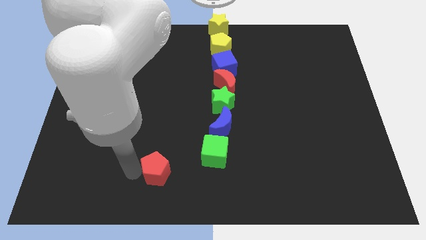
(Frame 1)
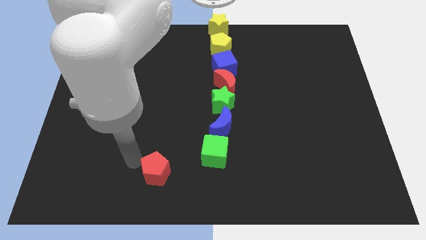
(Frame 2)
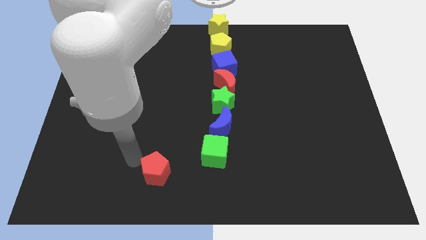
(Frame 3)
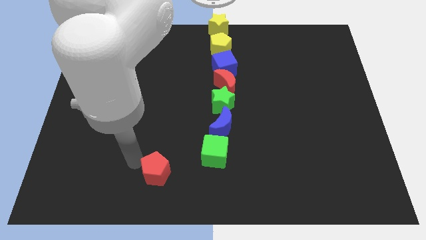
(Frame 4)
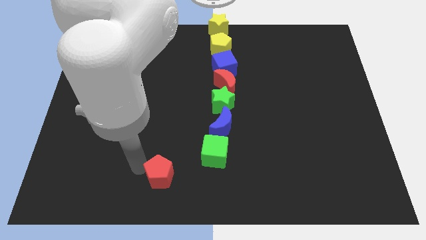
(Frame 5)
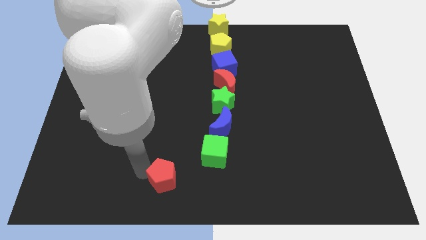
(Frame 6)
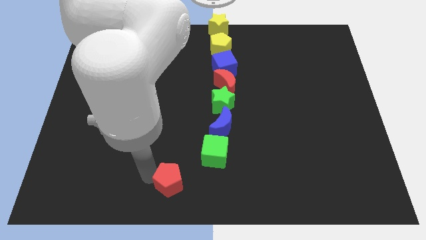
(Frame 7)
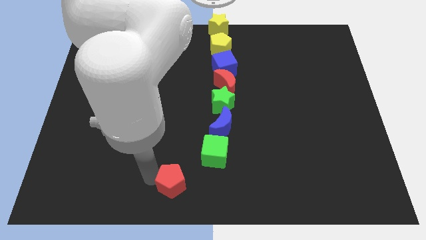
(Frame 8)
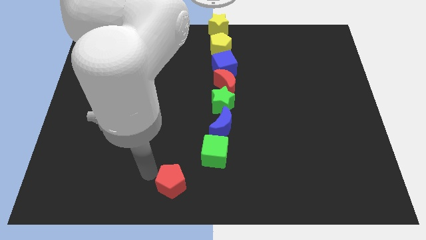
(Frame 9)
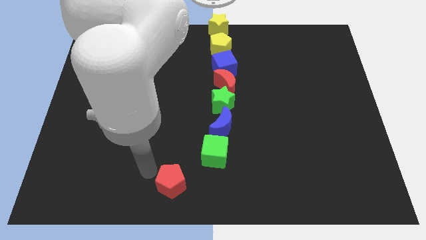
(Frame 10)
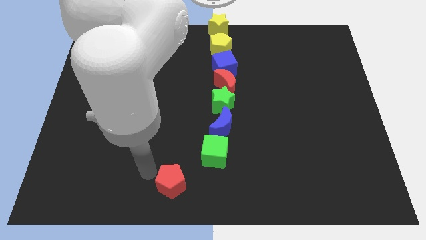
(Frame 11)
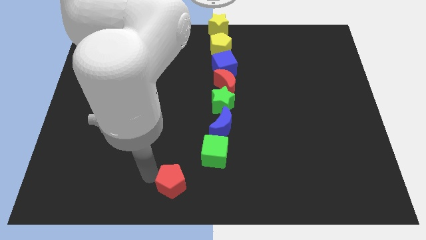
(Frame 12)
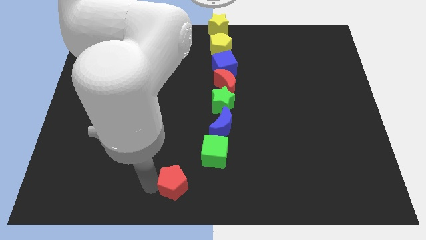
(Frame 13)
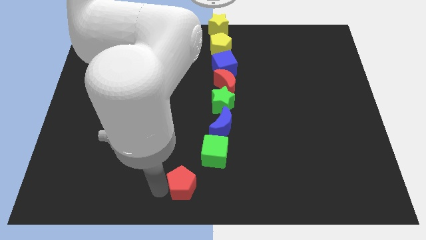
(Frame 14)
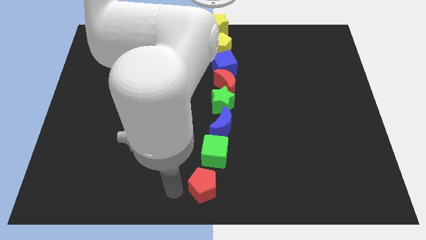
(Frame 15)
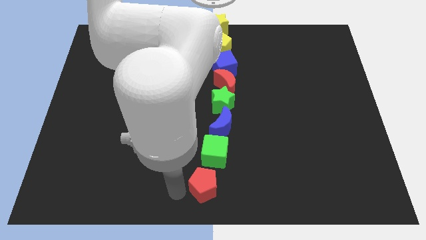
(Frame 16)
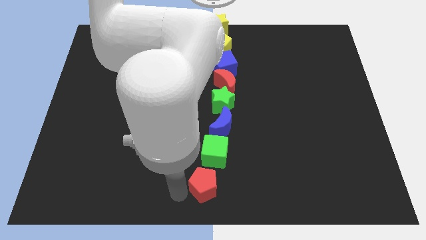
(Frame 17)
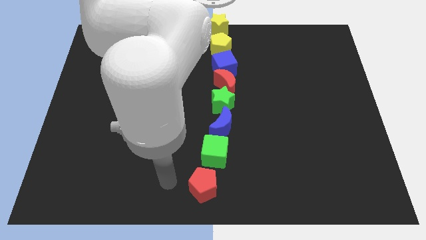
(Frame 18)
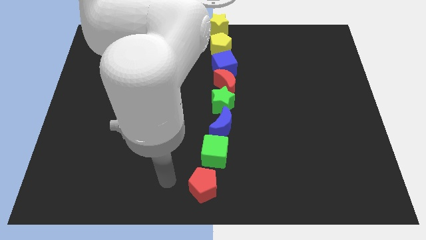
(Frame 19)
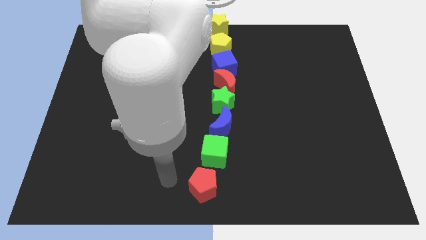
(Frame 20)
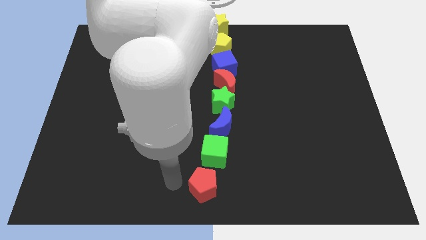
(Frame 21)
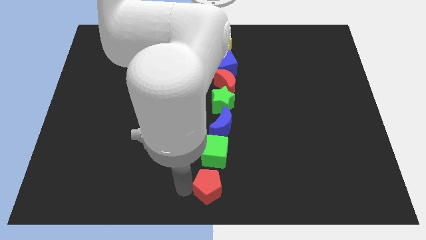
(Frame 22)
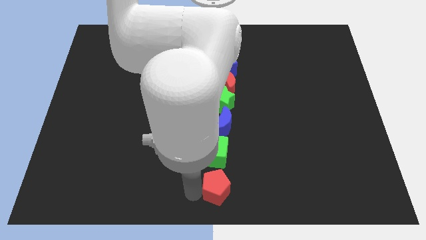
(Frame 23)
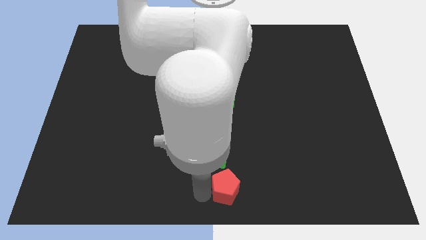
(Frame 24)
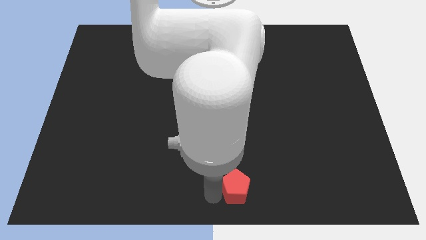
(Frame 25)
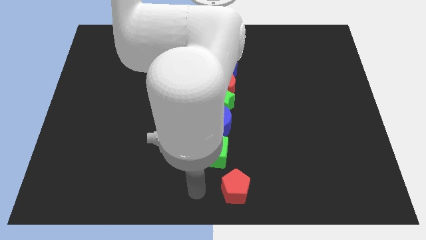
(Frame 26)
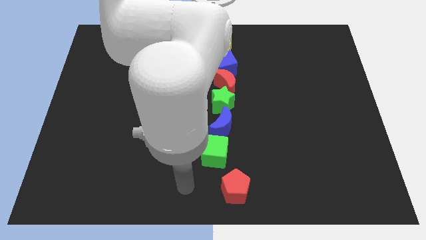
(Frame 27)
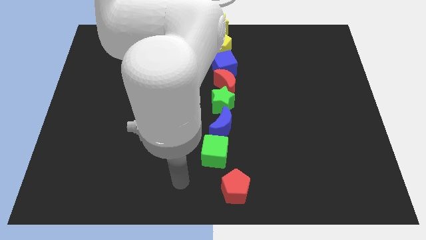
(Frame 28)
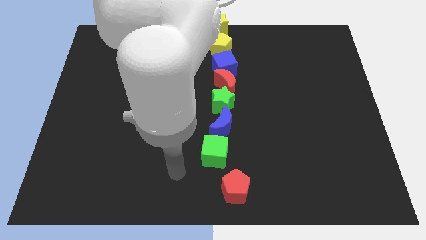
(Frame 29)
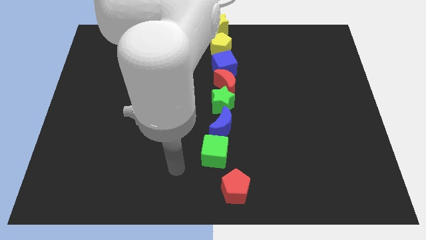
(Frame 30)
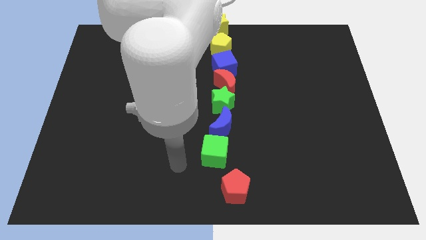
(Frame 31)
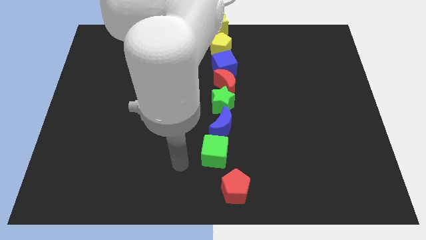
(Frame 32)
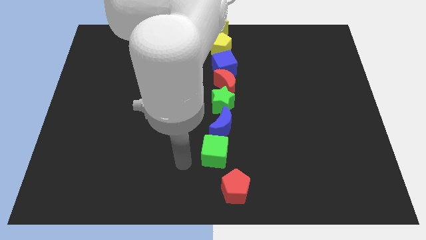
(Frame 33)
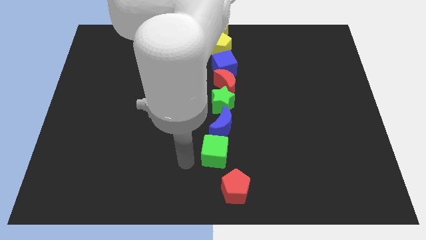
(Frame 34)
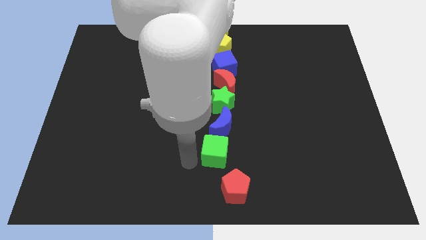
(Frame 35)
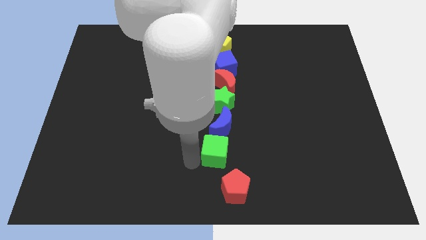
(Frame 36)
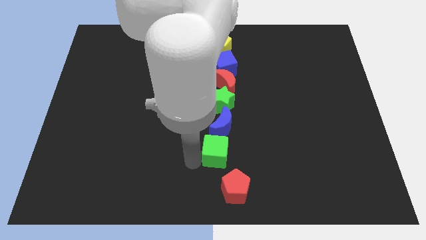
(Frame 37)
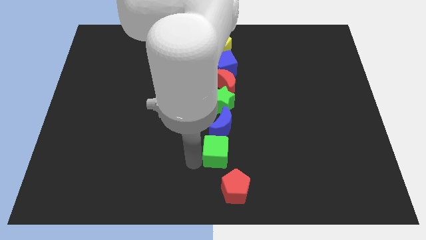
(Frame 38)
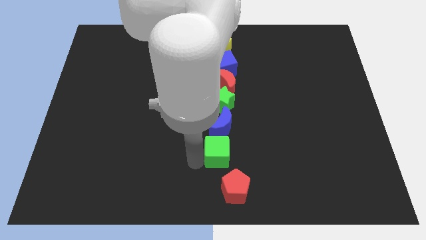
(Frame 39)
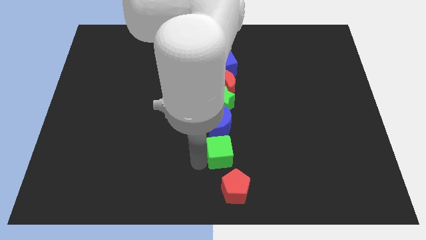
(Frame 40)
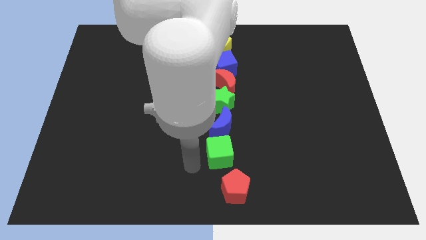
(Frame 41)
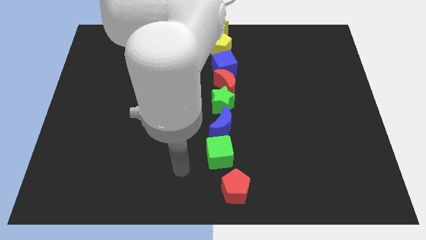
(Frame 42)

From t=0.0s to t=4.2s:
place the red pentagon below the green cube

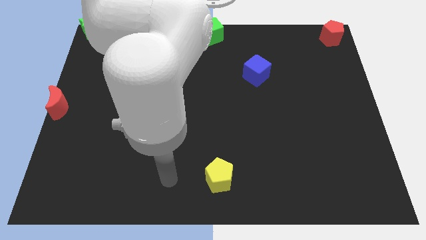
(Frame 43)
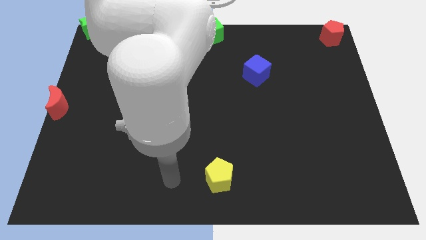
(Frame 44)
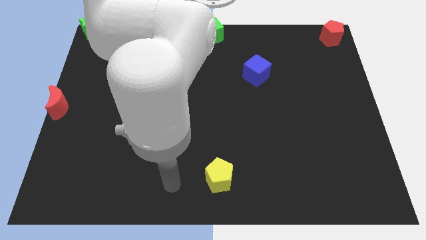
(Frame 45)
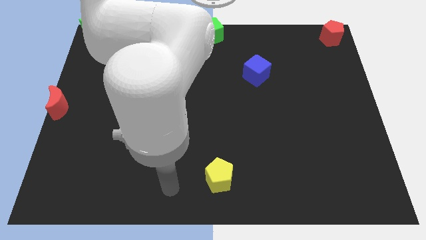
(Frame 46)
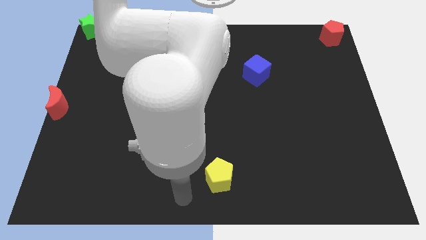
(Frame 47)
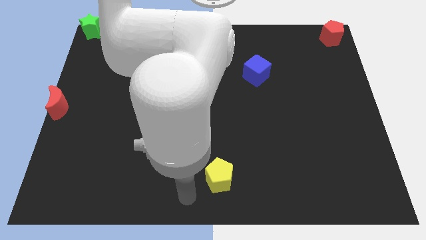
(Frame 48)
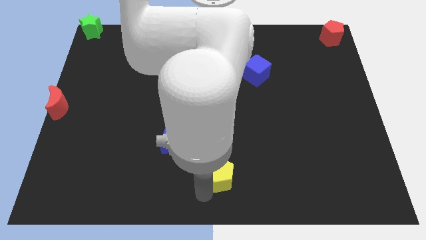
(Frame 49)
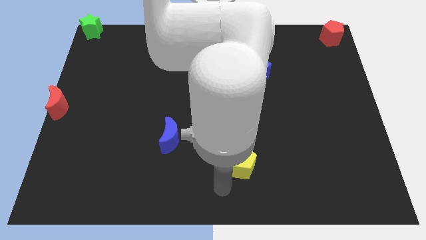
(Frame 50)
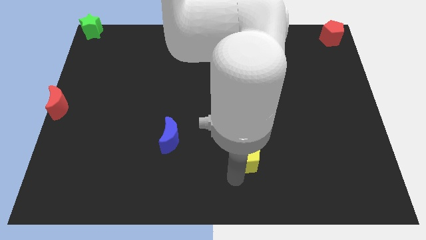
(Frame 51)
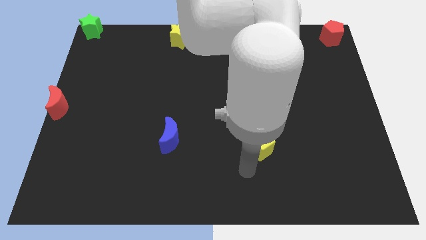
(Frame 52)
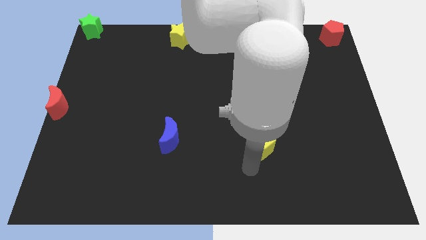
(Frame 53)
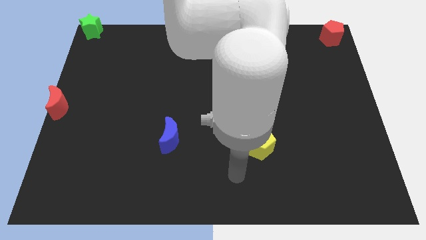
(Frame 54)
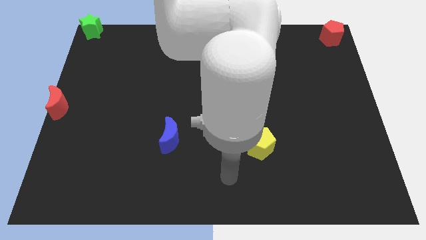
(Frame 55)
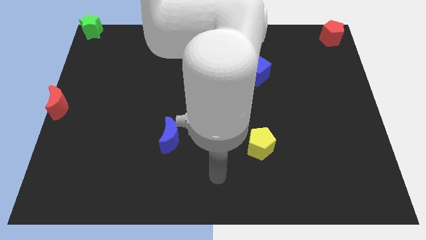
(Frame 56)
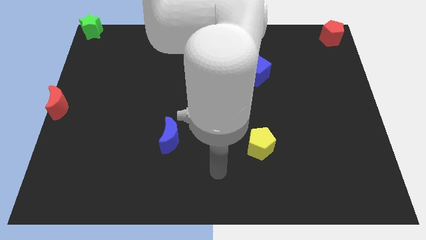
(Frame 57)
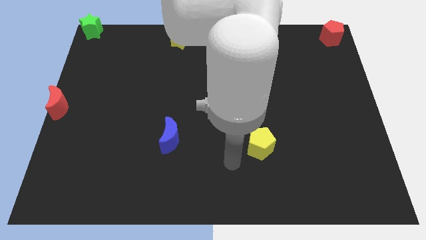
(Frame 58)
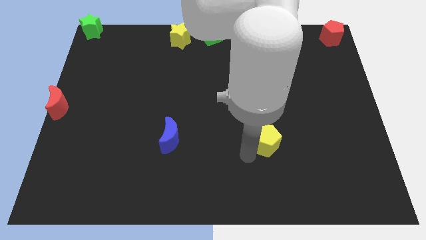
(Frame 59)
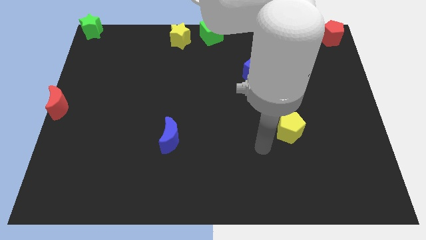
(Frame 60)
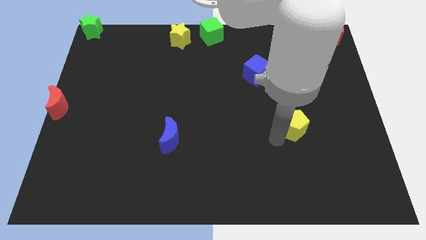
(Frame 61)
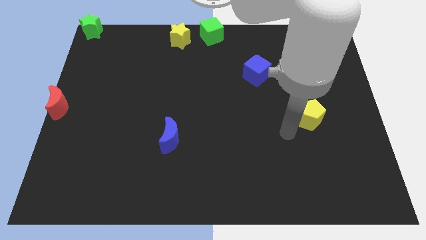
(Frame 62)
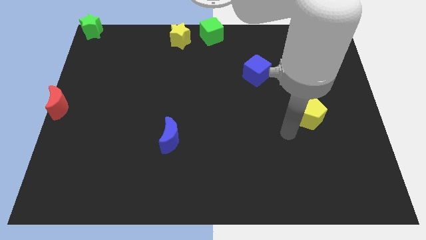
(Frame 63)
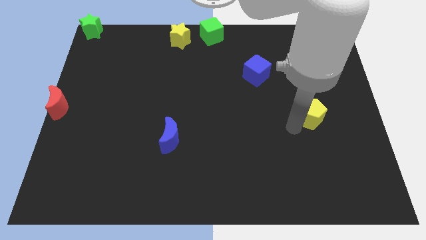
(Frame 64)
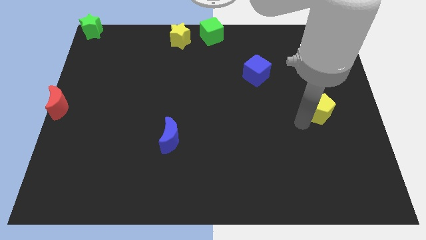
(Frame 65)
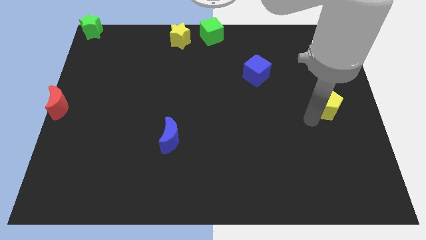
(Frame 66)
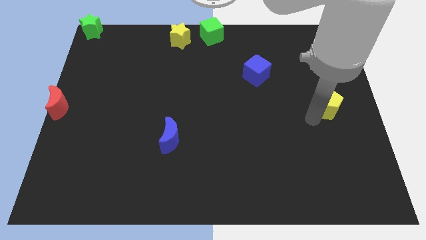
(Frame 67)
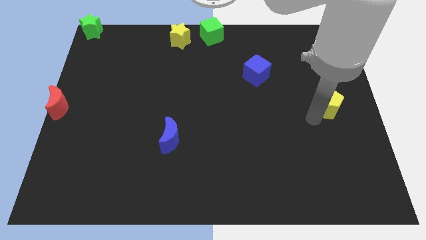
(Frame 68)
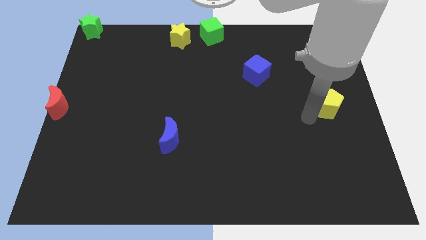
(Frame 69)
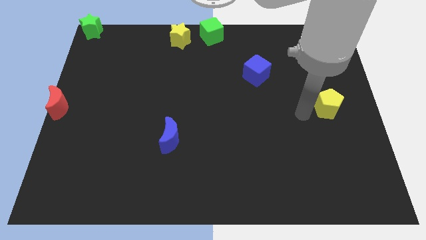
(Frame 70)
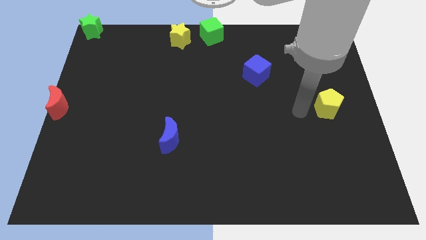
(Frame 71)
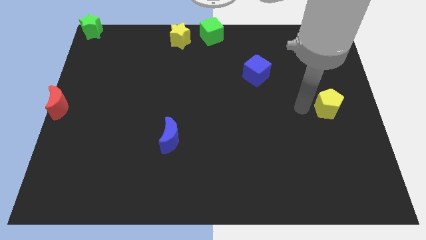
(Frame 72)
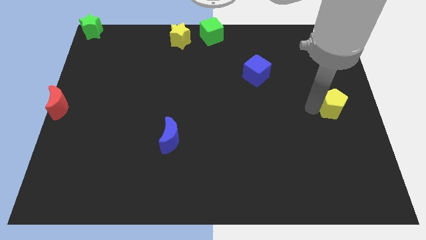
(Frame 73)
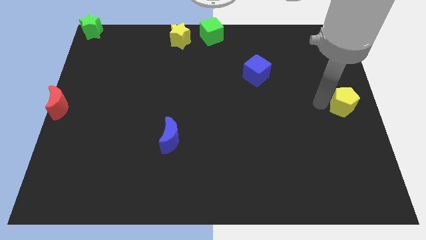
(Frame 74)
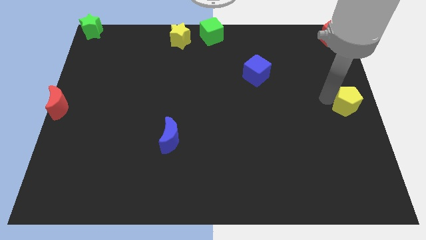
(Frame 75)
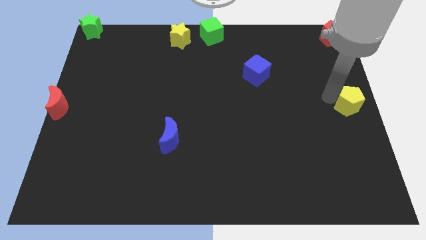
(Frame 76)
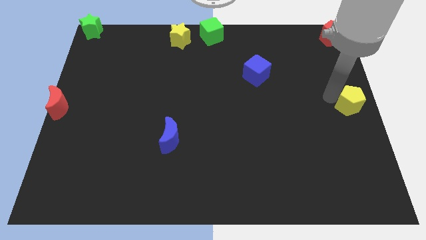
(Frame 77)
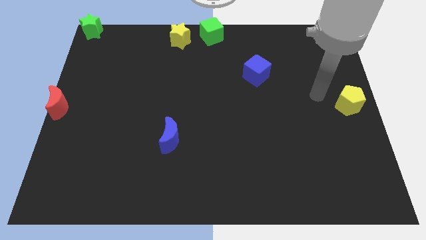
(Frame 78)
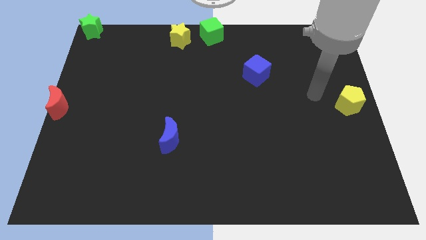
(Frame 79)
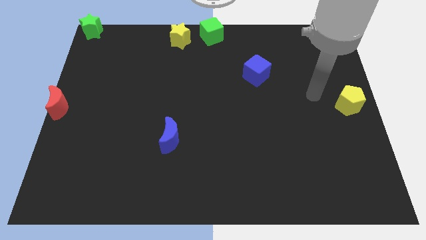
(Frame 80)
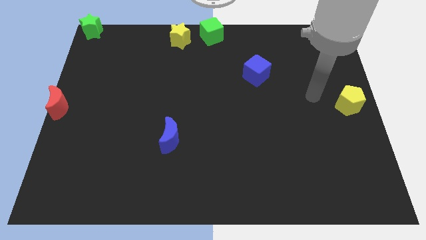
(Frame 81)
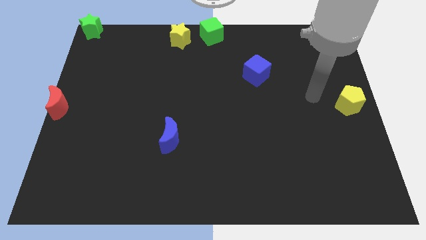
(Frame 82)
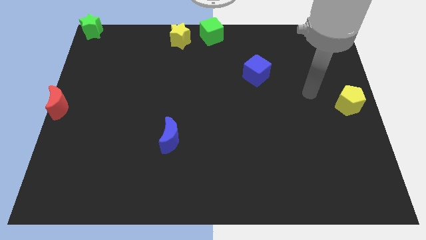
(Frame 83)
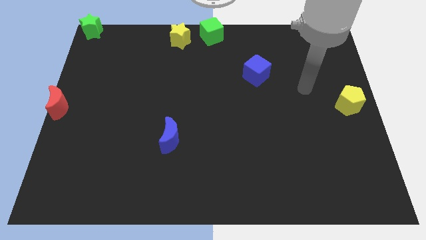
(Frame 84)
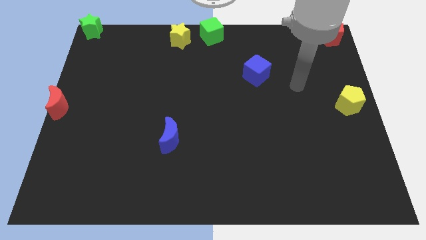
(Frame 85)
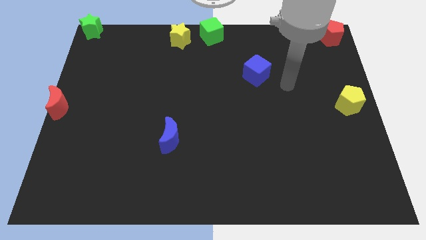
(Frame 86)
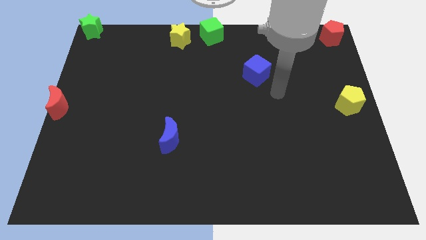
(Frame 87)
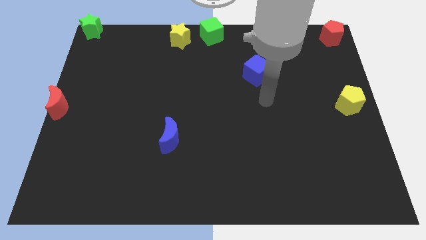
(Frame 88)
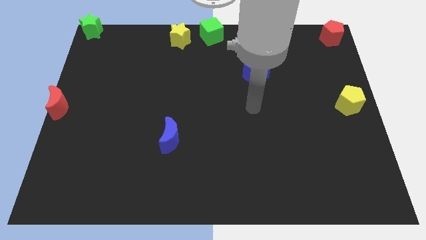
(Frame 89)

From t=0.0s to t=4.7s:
place the yellow pentagon below the red pentagon vertically

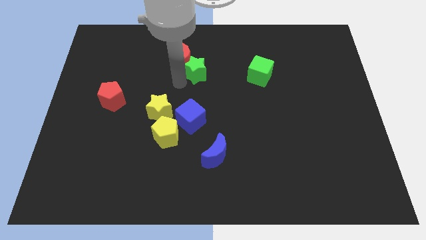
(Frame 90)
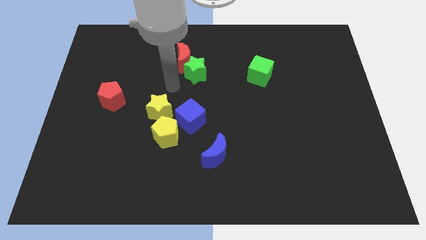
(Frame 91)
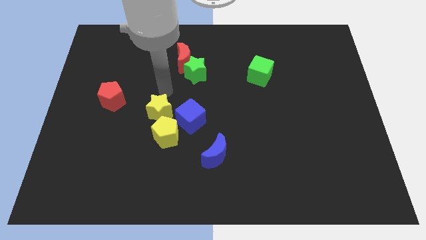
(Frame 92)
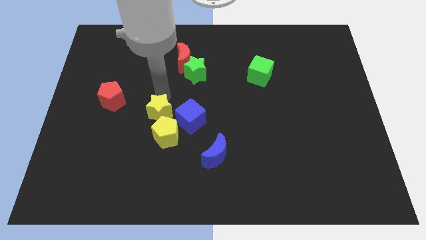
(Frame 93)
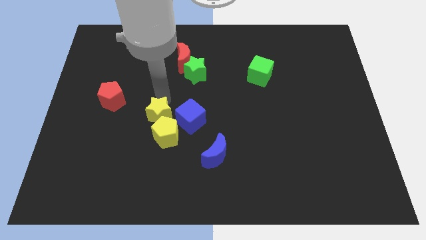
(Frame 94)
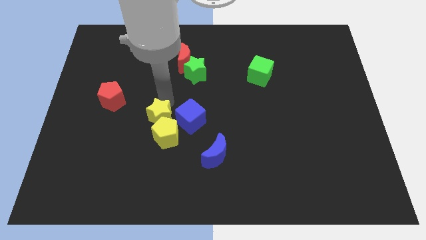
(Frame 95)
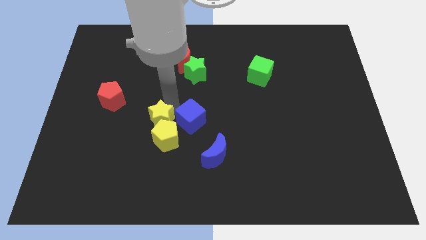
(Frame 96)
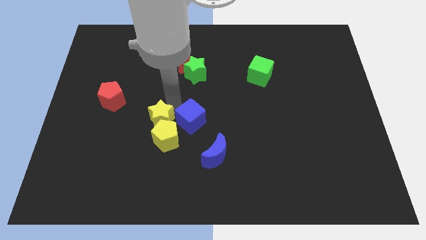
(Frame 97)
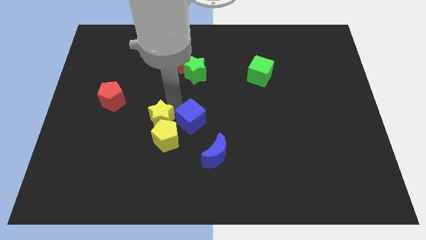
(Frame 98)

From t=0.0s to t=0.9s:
slightly move the yellow star towards bottom
